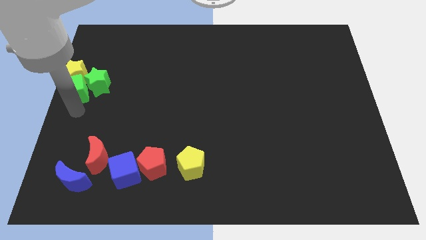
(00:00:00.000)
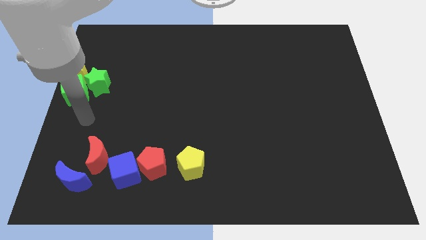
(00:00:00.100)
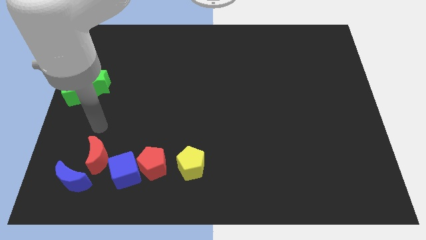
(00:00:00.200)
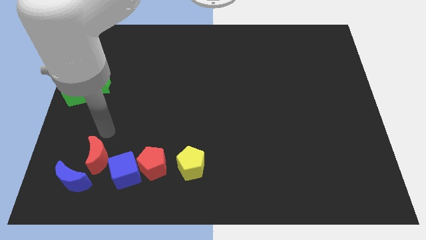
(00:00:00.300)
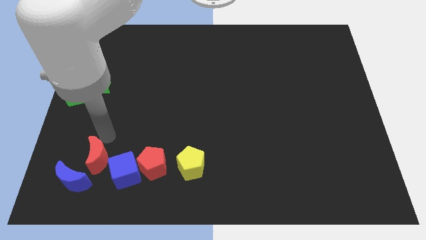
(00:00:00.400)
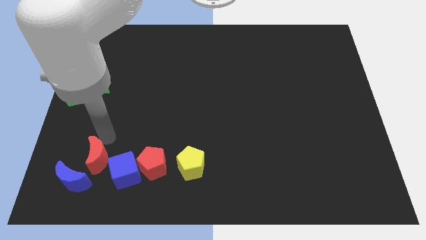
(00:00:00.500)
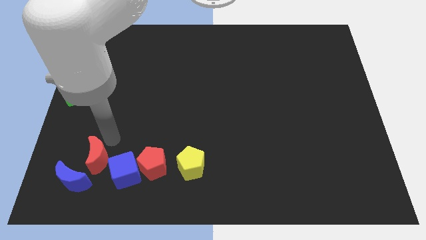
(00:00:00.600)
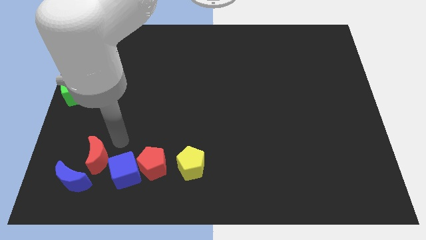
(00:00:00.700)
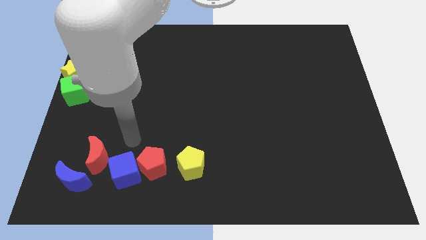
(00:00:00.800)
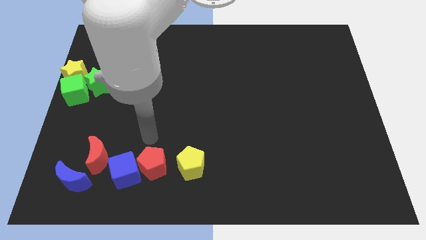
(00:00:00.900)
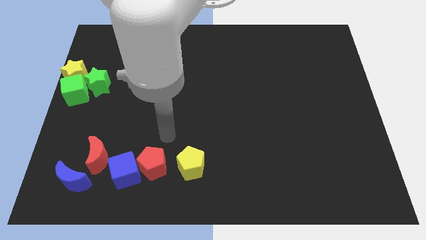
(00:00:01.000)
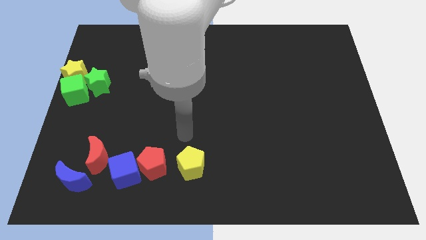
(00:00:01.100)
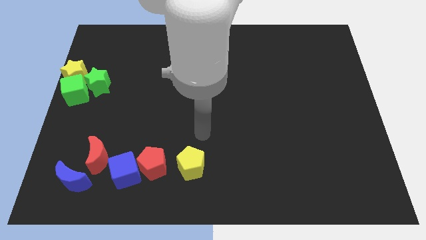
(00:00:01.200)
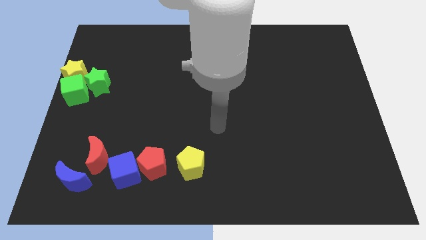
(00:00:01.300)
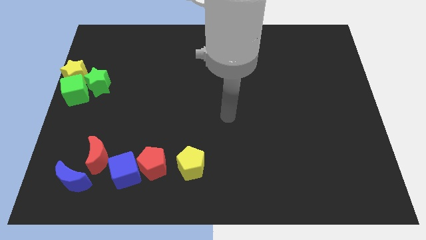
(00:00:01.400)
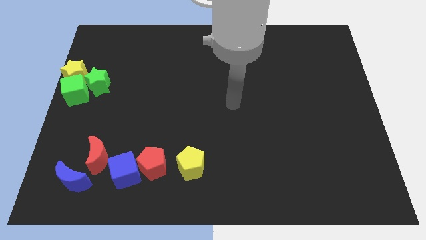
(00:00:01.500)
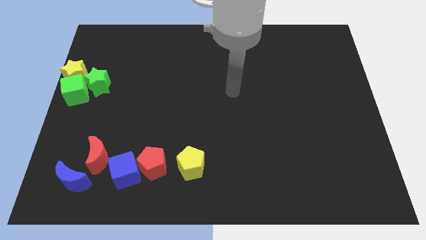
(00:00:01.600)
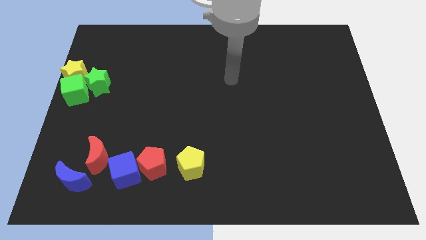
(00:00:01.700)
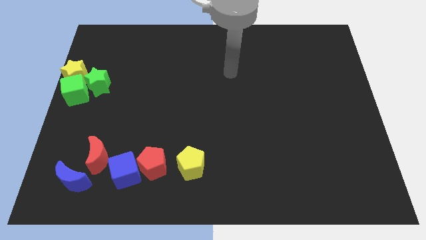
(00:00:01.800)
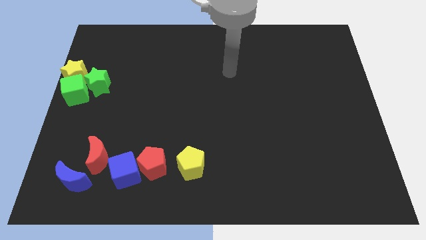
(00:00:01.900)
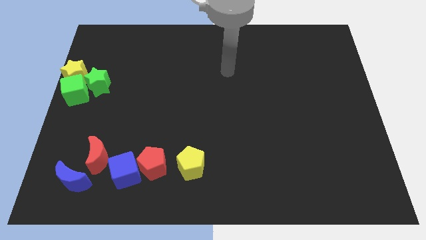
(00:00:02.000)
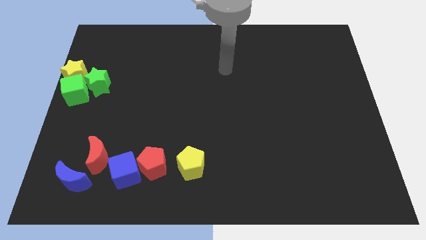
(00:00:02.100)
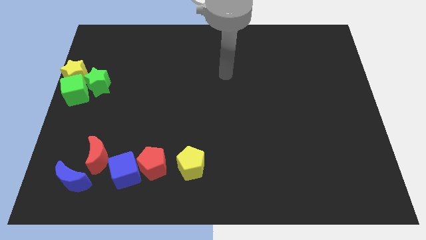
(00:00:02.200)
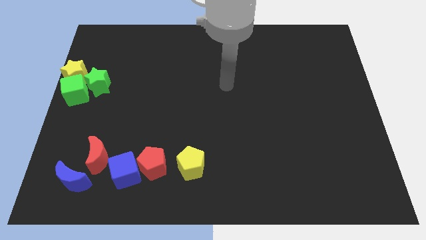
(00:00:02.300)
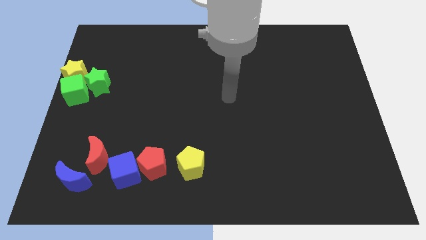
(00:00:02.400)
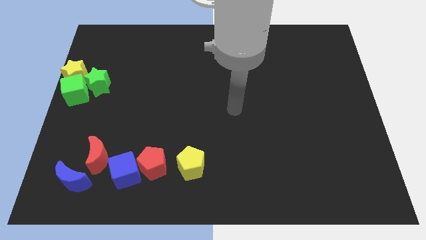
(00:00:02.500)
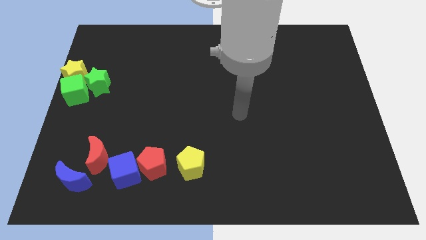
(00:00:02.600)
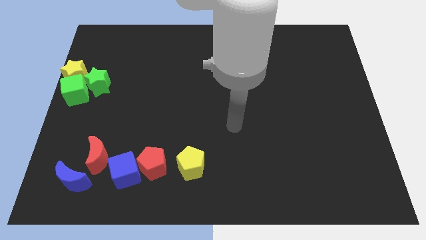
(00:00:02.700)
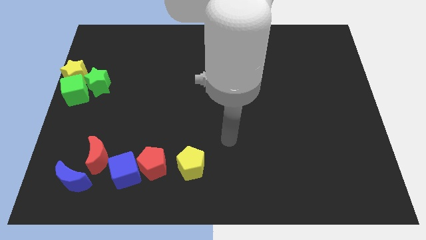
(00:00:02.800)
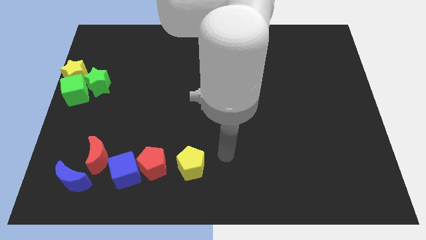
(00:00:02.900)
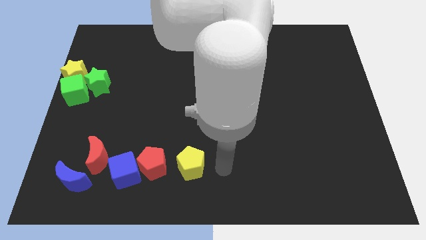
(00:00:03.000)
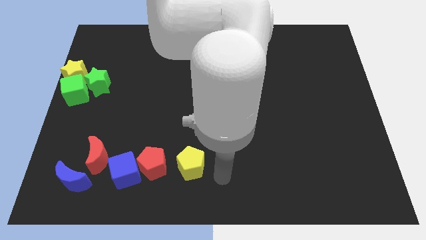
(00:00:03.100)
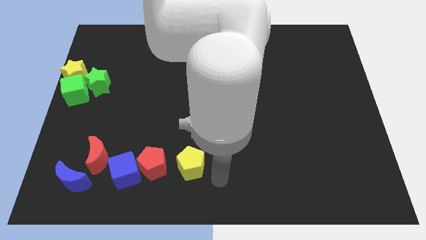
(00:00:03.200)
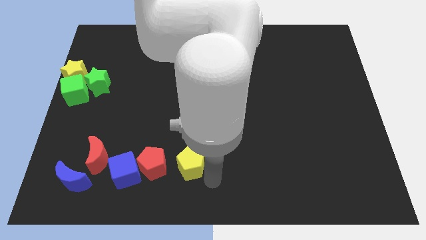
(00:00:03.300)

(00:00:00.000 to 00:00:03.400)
move your arm close to the yellow pentagon

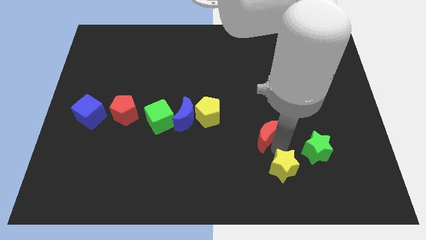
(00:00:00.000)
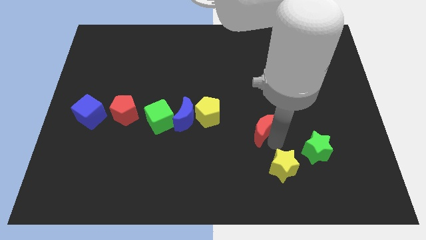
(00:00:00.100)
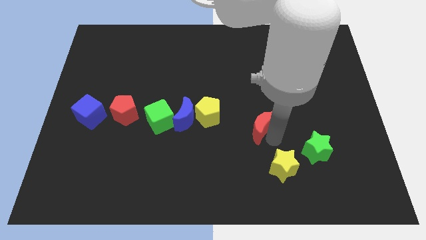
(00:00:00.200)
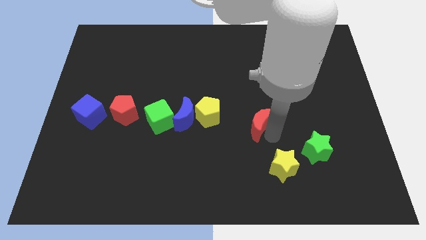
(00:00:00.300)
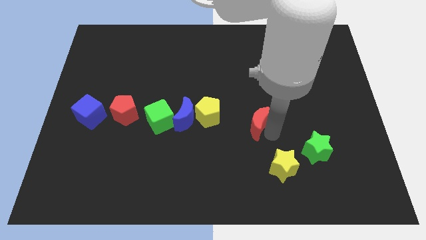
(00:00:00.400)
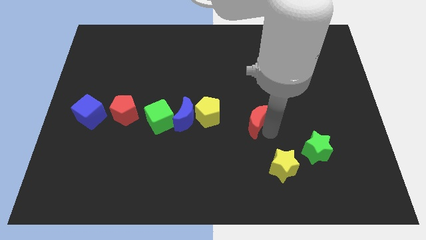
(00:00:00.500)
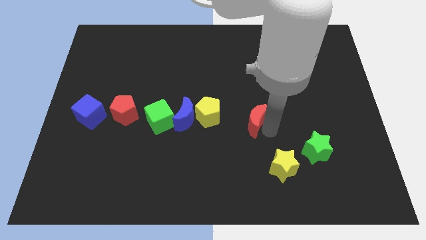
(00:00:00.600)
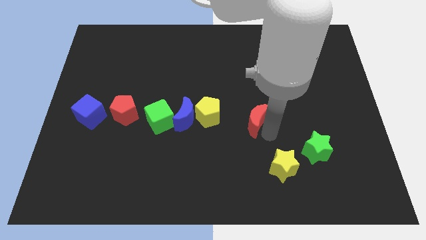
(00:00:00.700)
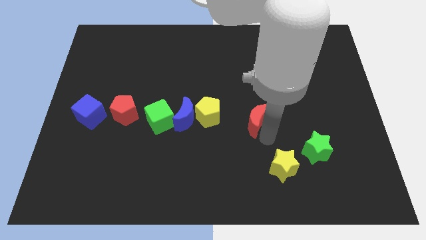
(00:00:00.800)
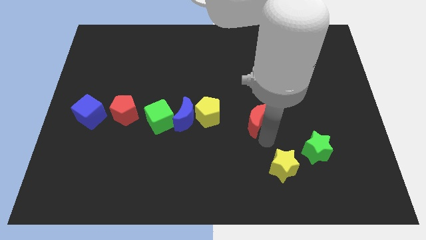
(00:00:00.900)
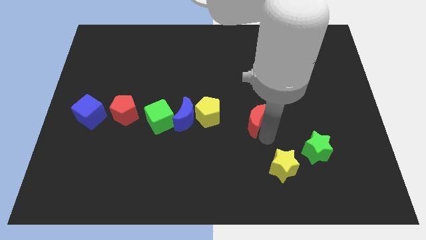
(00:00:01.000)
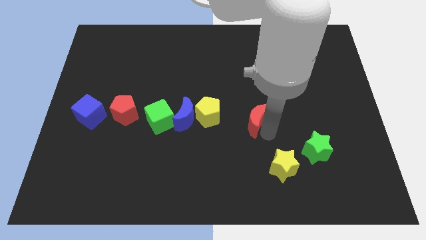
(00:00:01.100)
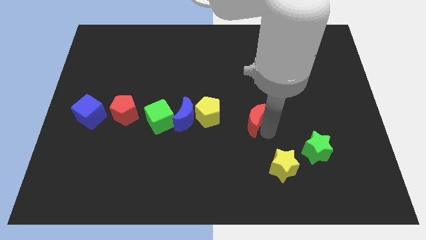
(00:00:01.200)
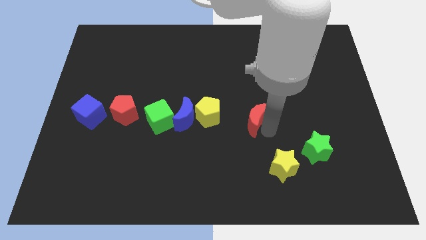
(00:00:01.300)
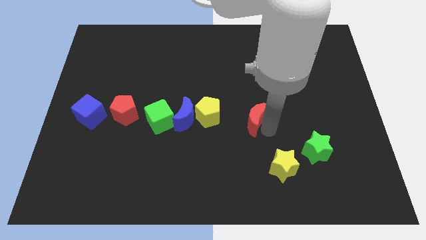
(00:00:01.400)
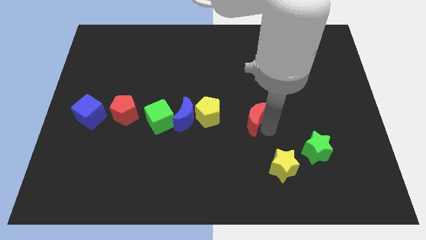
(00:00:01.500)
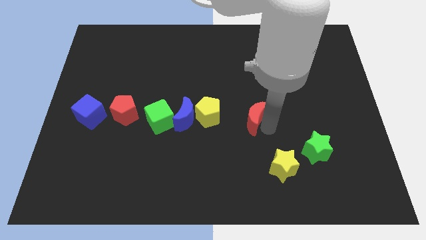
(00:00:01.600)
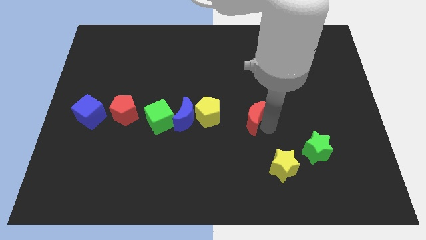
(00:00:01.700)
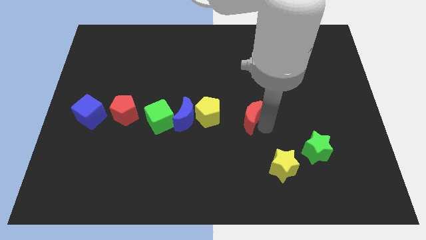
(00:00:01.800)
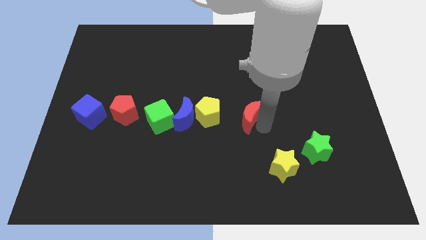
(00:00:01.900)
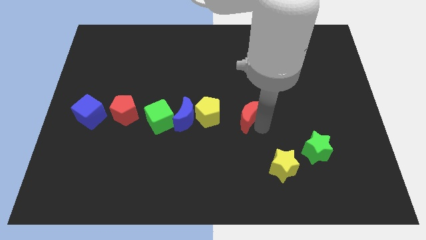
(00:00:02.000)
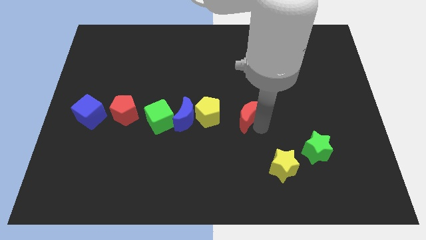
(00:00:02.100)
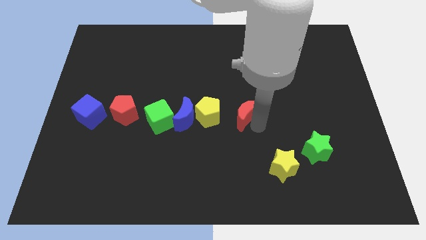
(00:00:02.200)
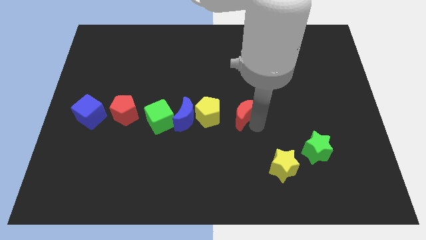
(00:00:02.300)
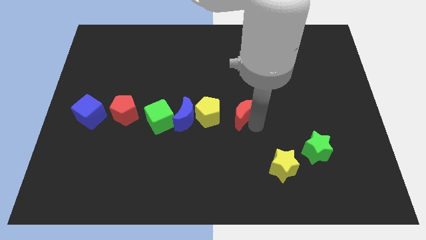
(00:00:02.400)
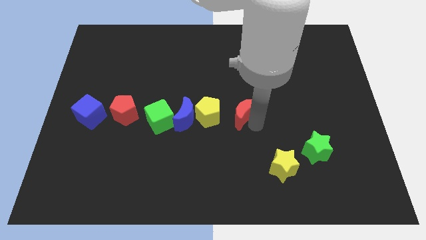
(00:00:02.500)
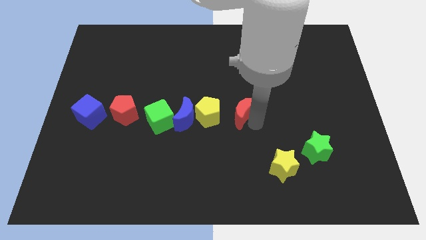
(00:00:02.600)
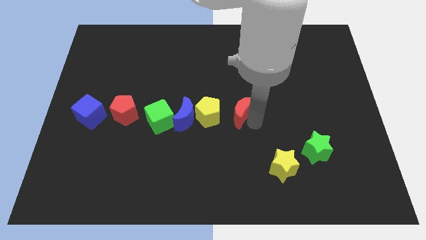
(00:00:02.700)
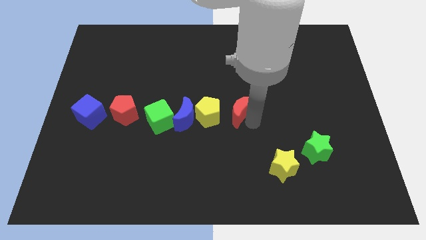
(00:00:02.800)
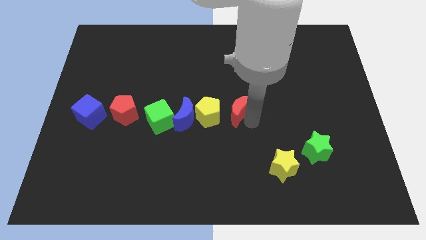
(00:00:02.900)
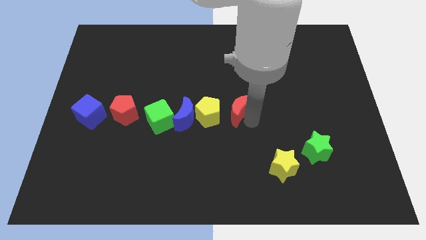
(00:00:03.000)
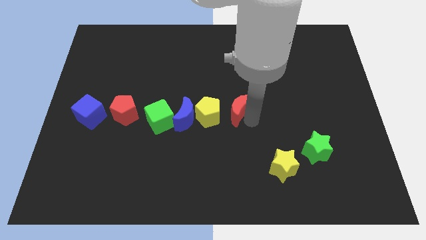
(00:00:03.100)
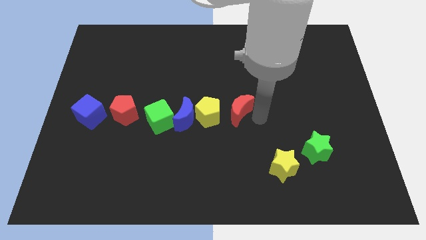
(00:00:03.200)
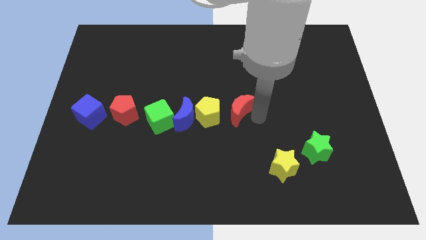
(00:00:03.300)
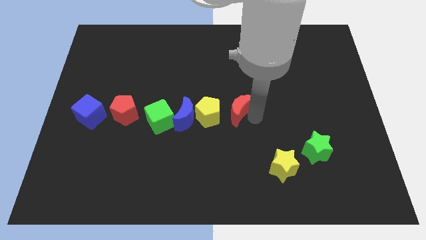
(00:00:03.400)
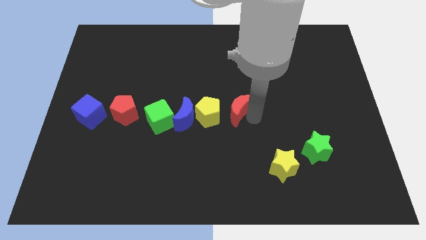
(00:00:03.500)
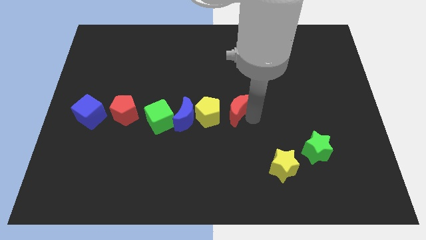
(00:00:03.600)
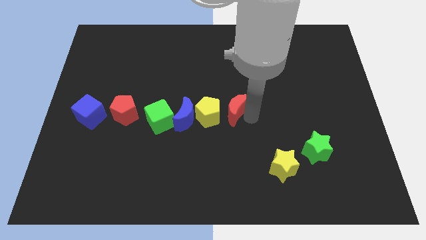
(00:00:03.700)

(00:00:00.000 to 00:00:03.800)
move red moon beside yellow pentagon

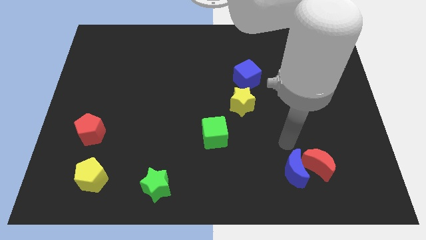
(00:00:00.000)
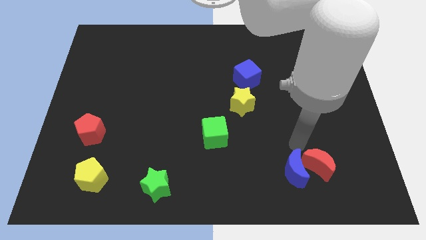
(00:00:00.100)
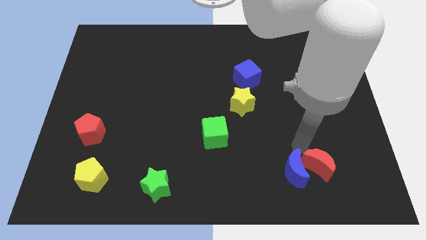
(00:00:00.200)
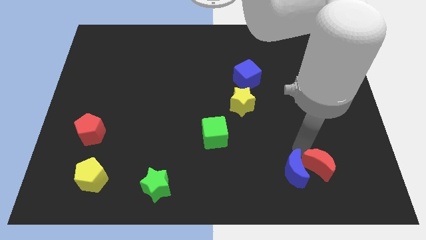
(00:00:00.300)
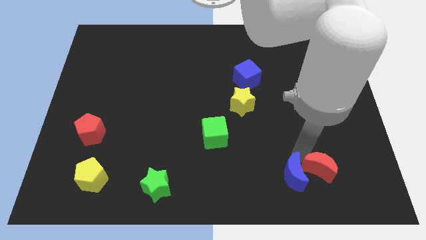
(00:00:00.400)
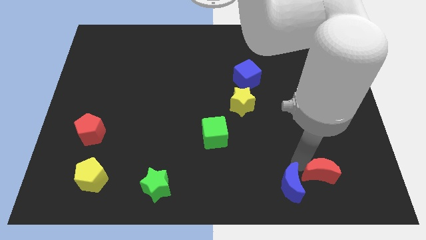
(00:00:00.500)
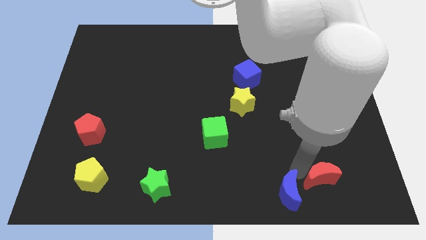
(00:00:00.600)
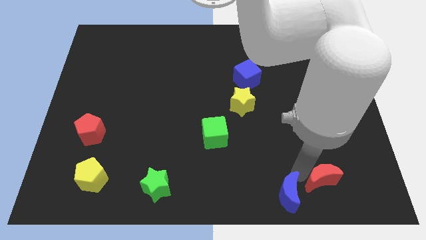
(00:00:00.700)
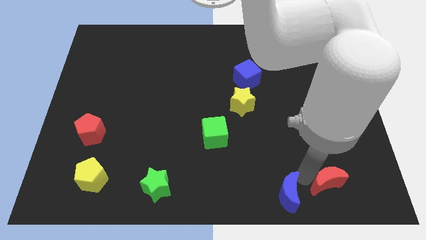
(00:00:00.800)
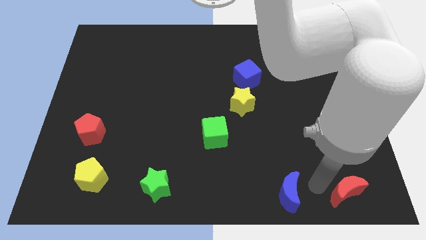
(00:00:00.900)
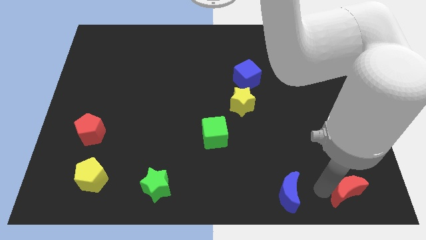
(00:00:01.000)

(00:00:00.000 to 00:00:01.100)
slightly push the red moon towards the bottom right to the board

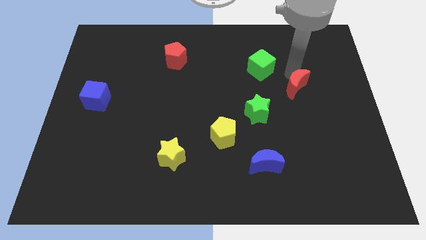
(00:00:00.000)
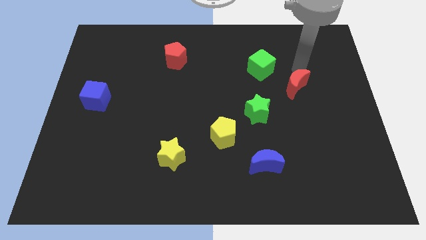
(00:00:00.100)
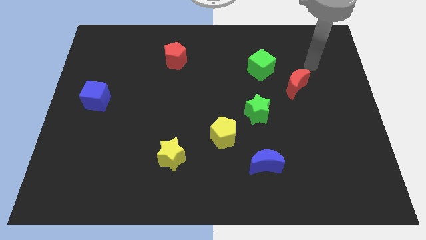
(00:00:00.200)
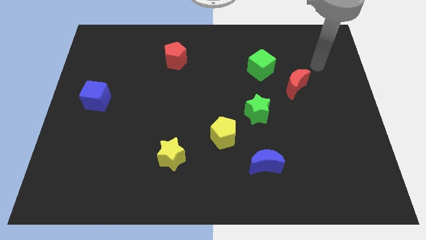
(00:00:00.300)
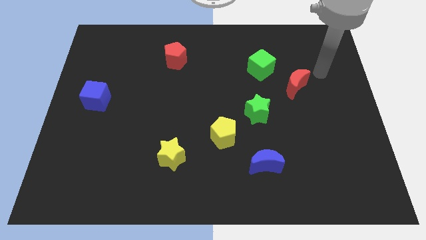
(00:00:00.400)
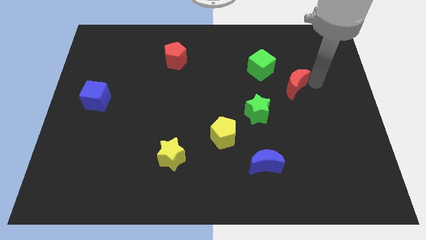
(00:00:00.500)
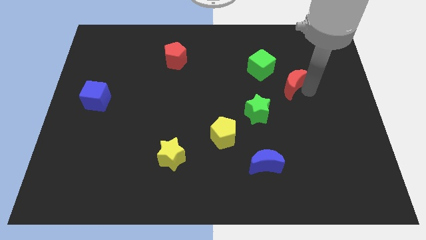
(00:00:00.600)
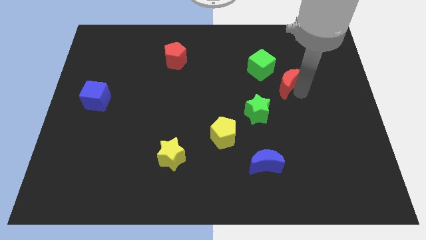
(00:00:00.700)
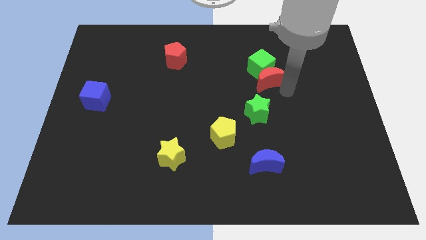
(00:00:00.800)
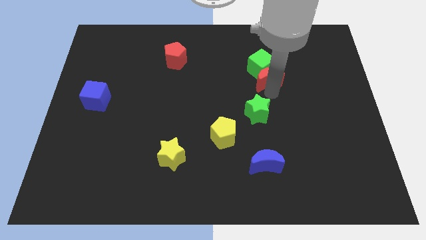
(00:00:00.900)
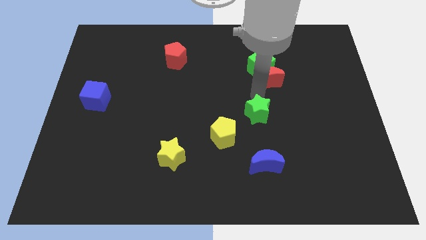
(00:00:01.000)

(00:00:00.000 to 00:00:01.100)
push red moon into green cube
